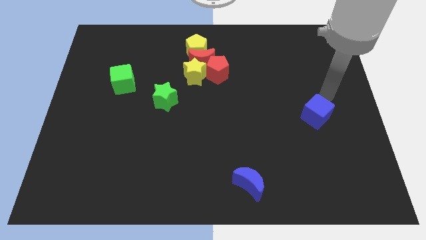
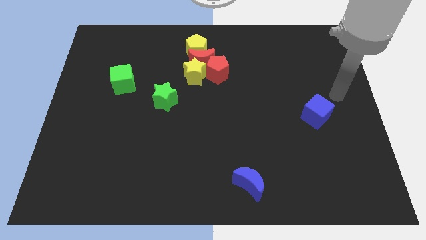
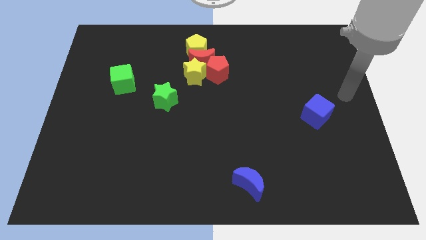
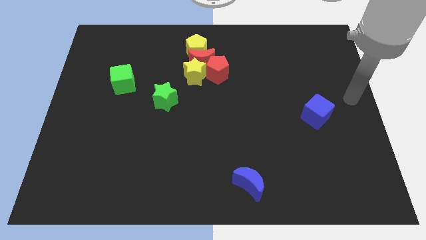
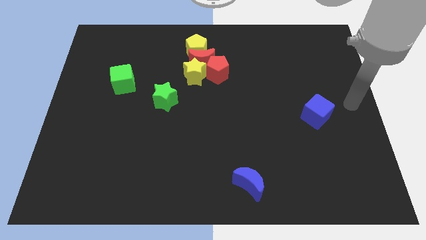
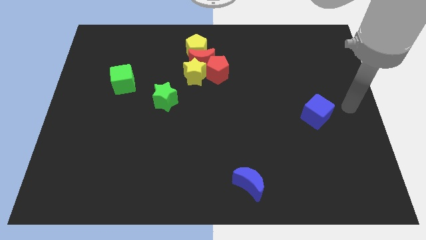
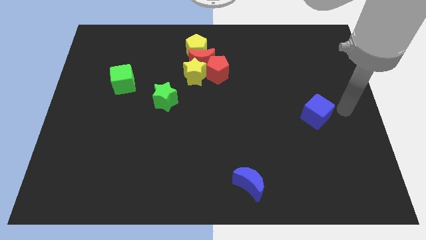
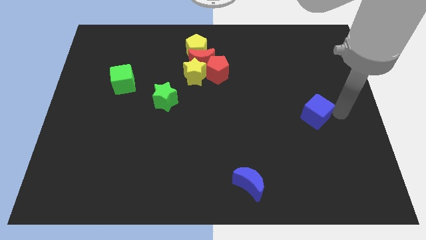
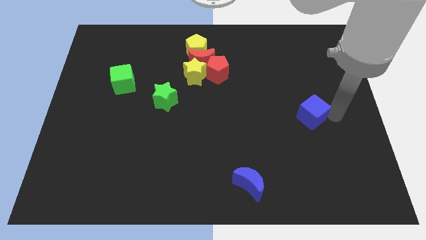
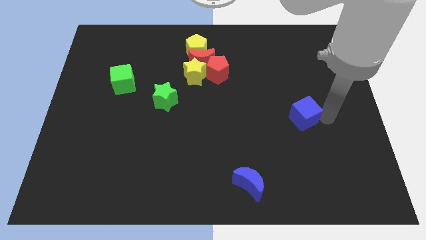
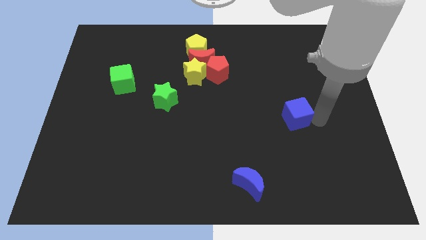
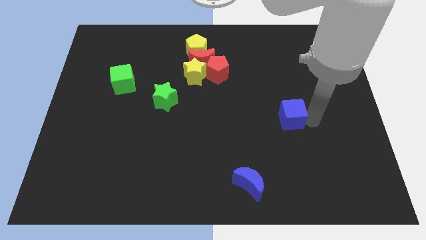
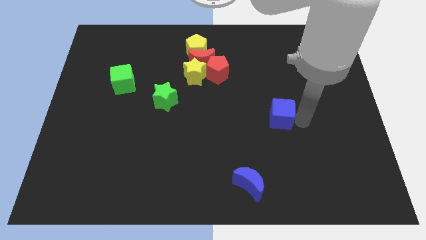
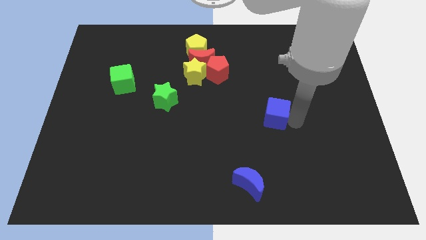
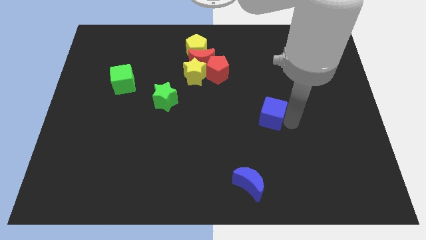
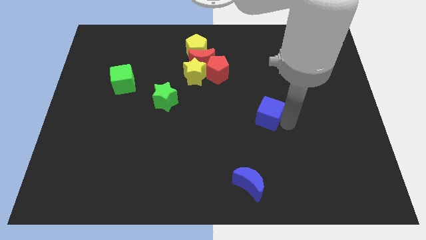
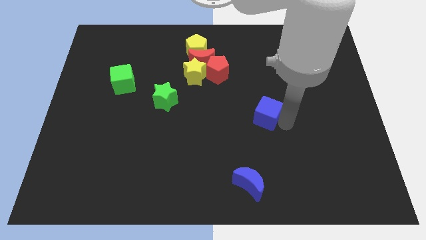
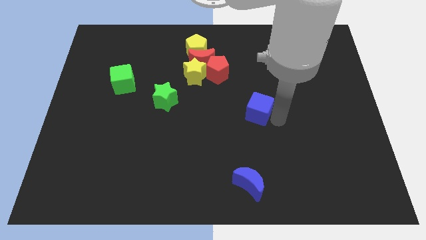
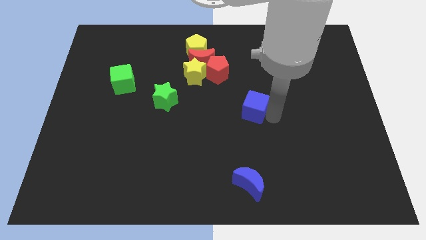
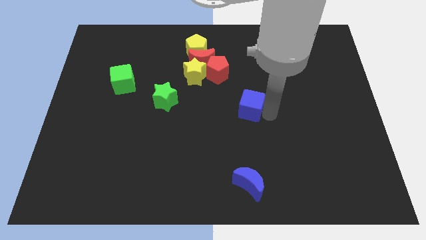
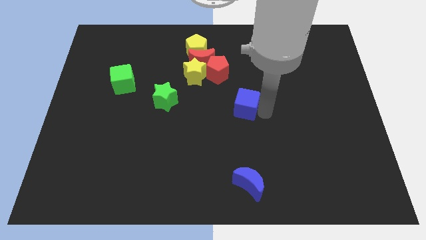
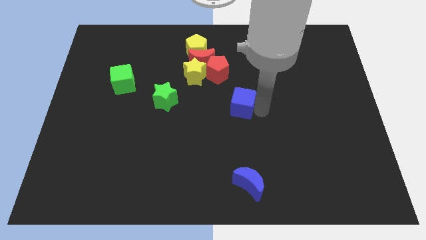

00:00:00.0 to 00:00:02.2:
move the blue cube vertically above the blue crescent

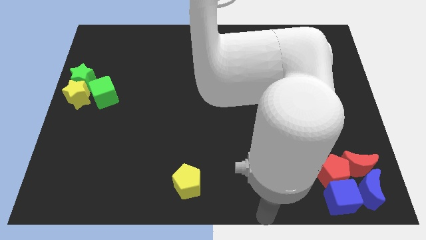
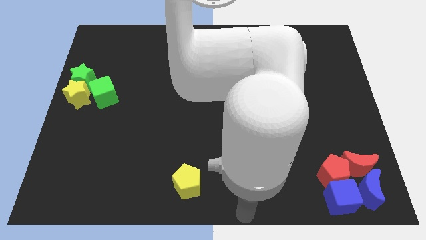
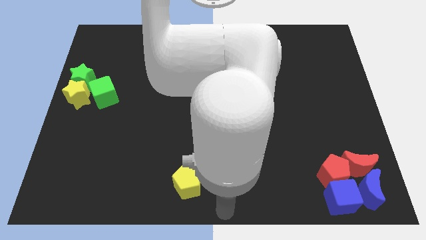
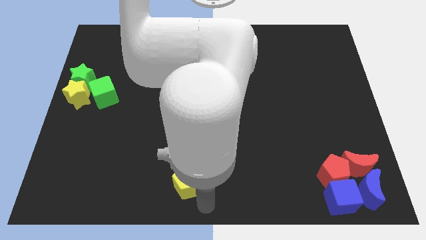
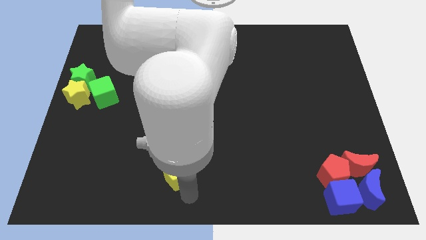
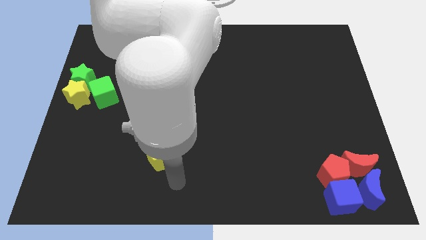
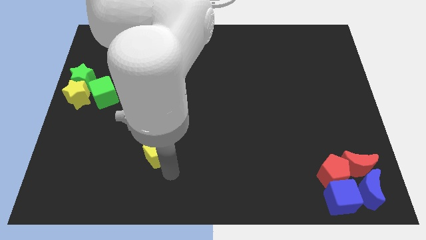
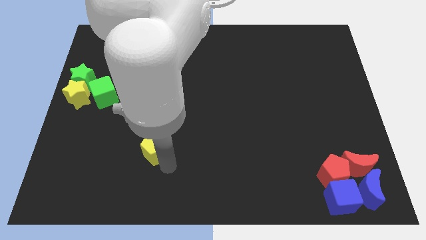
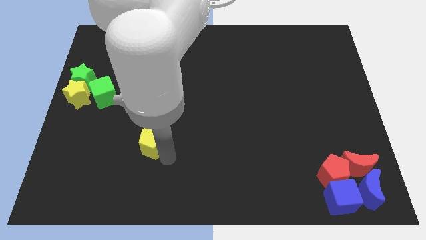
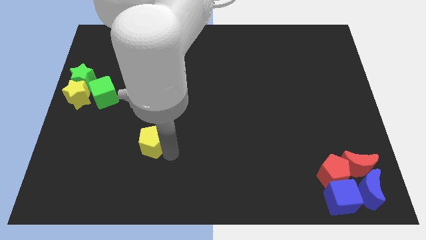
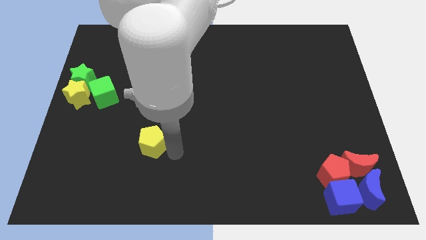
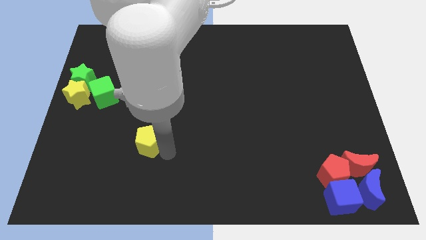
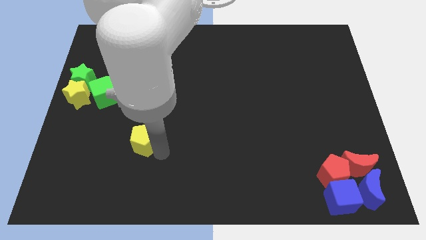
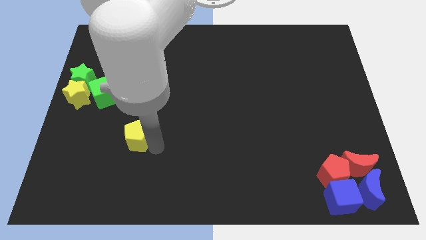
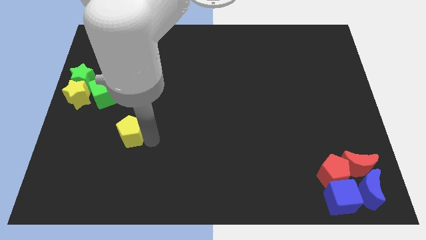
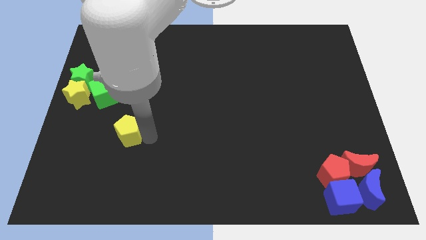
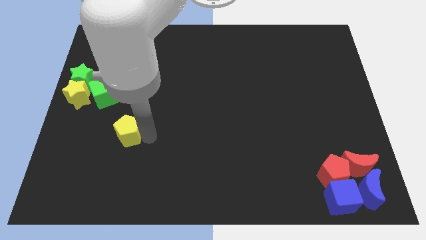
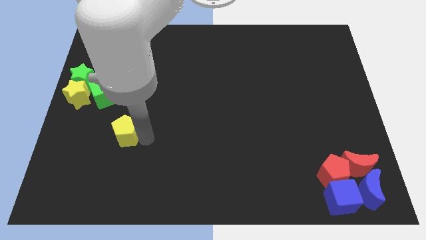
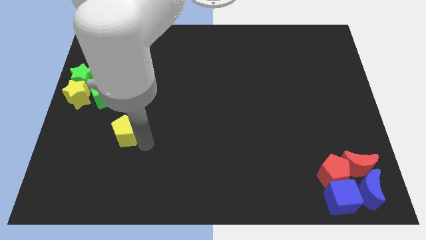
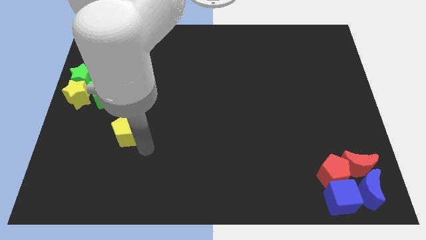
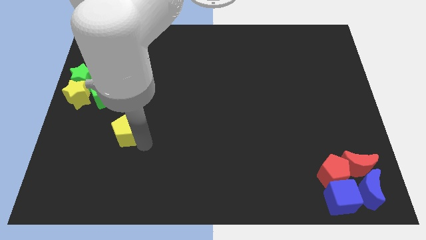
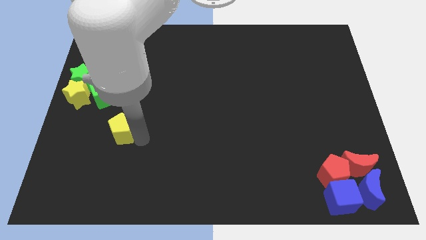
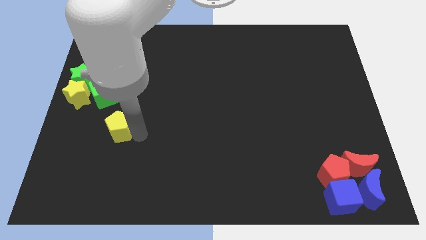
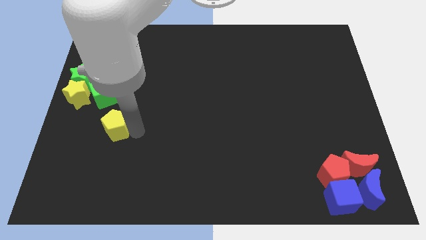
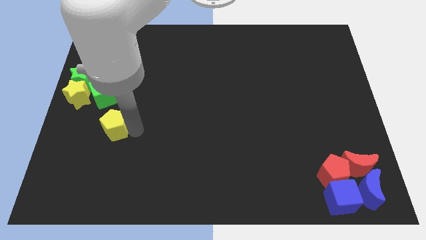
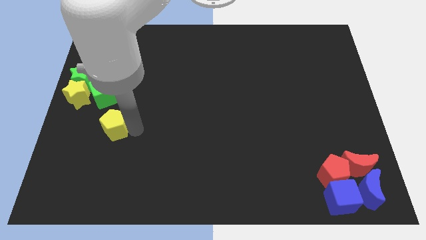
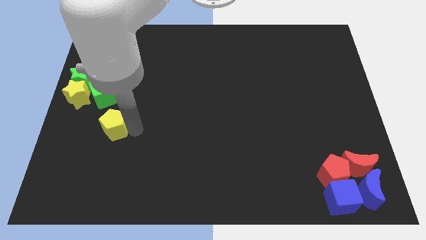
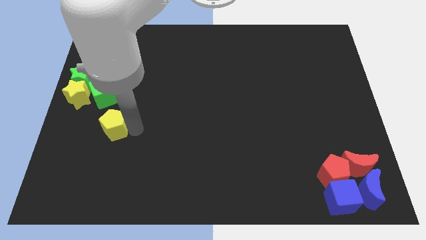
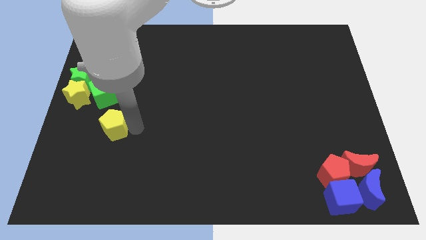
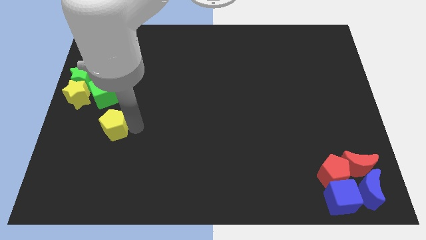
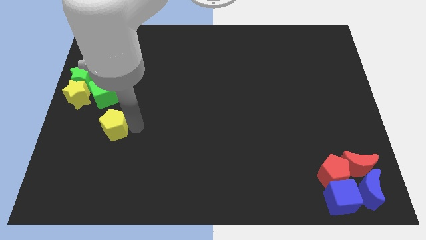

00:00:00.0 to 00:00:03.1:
push the yellow pentagon towards the group of blocks

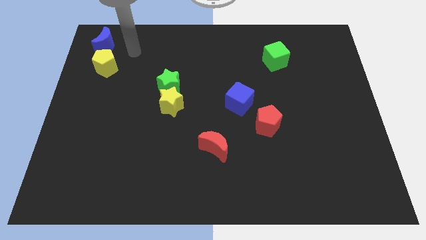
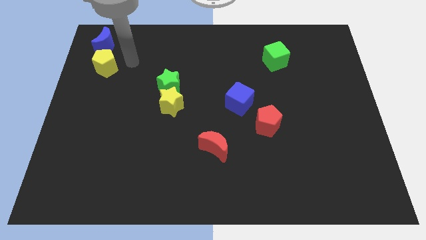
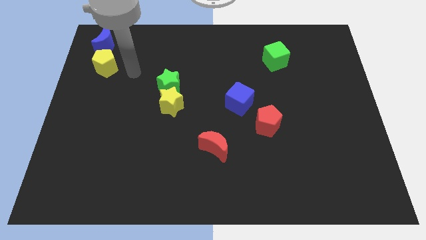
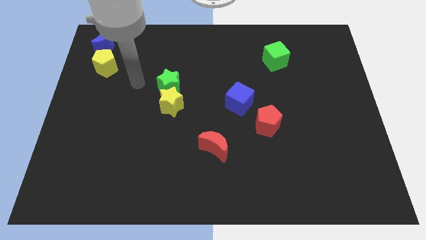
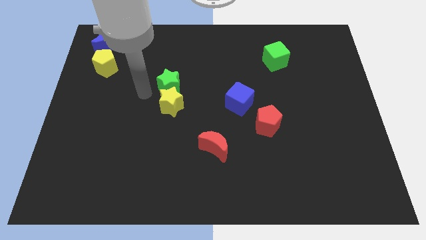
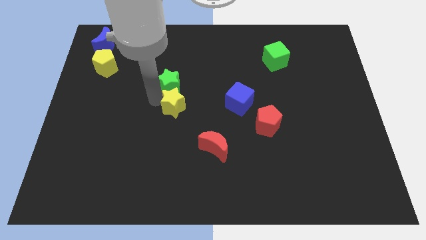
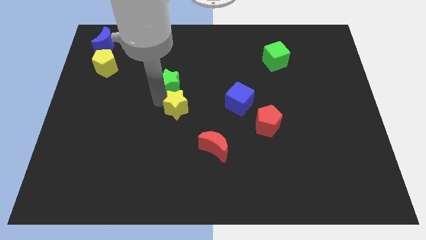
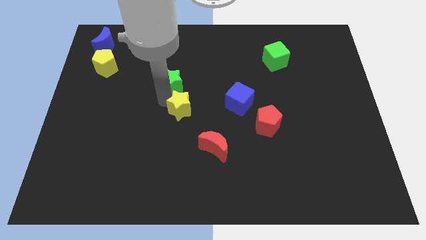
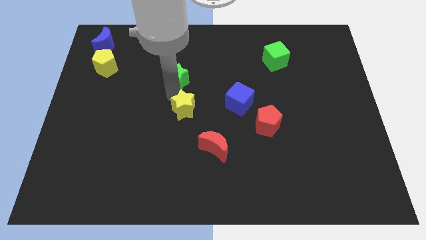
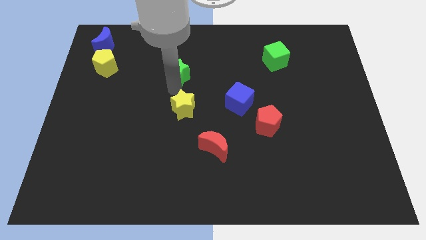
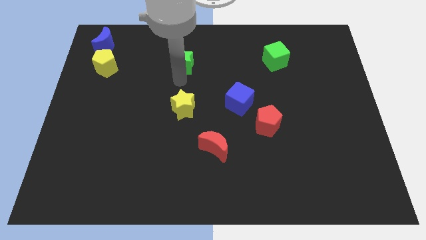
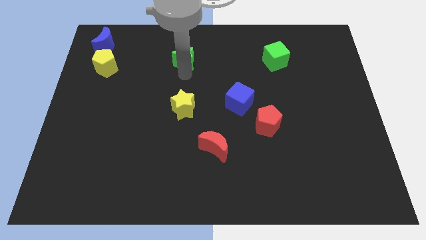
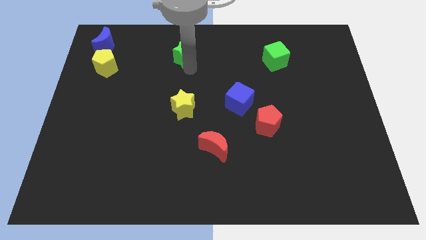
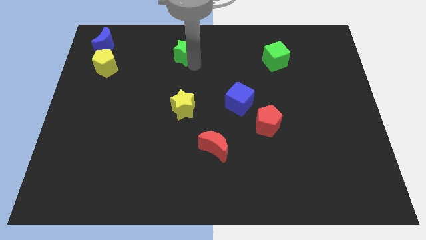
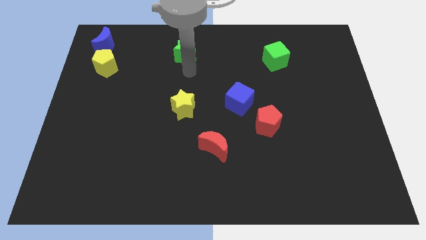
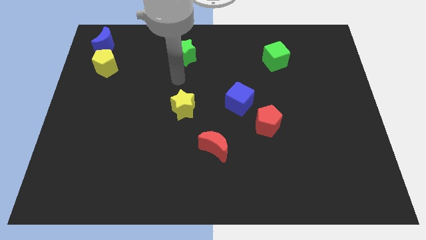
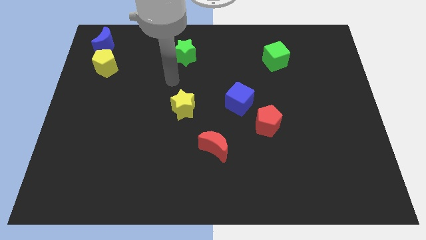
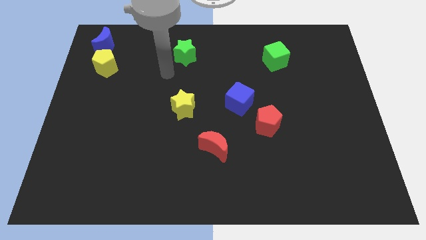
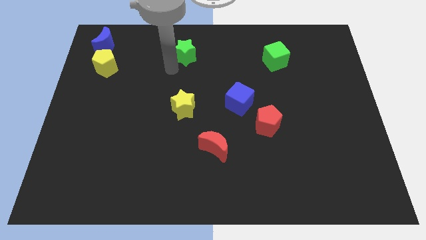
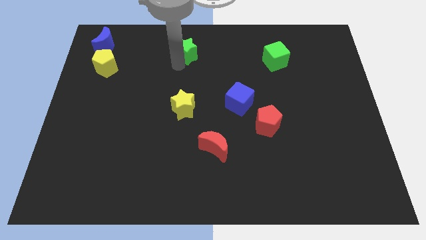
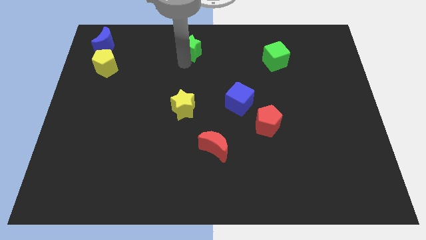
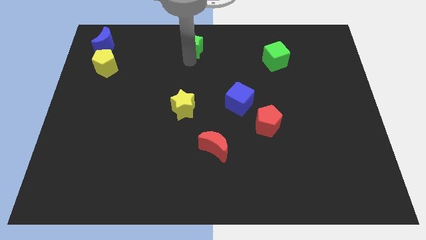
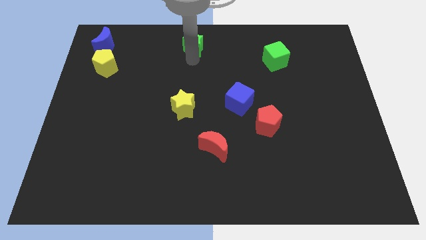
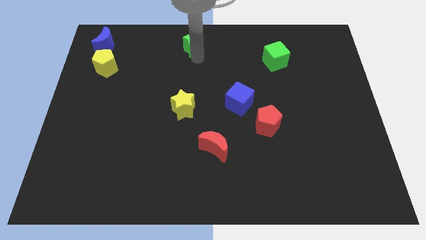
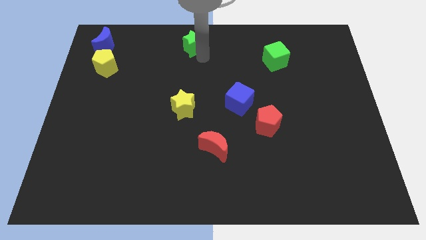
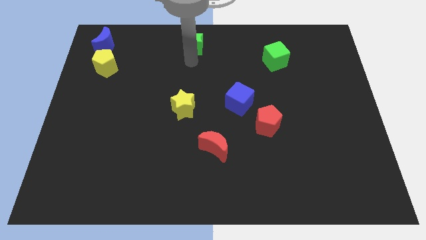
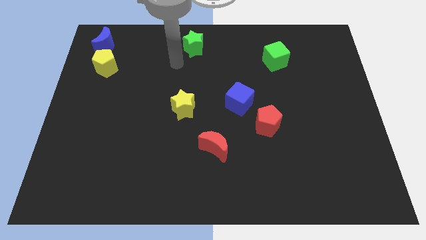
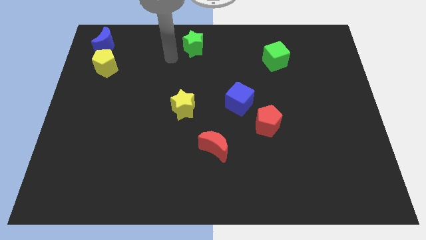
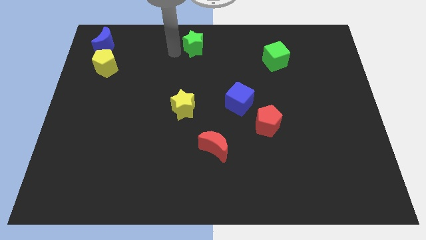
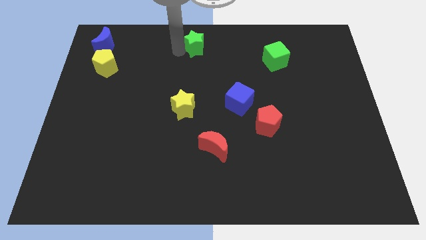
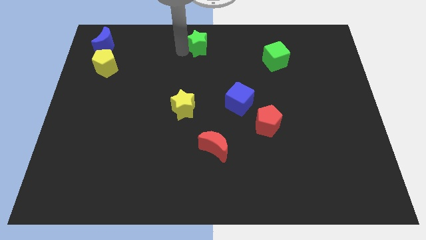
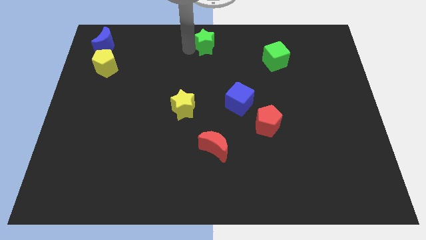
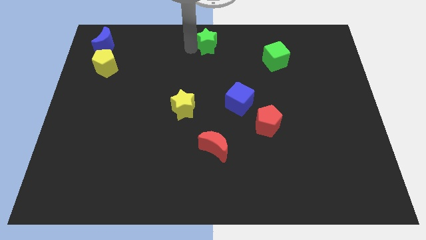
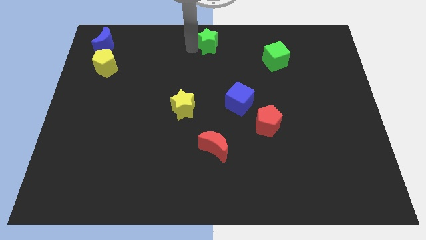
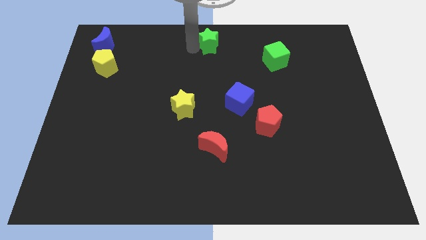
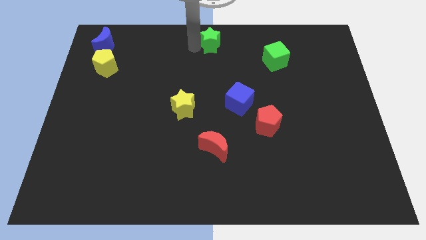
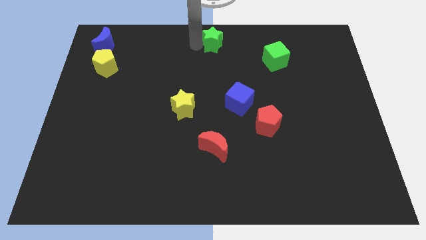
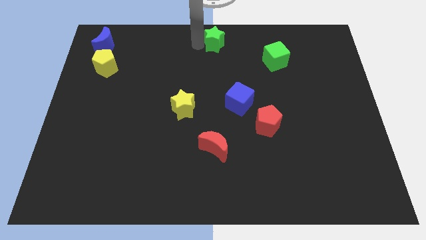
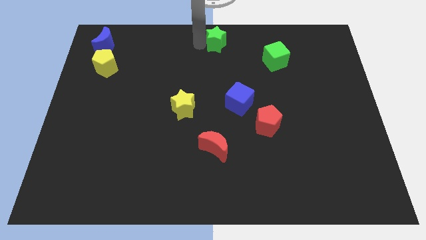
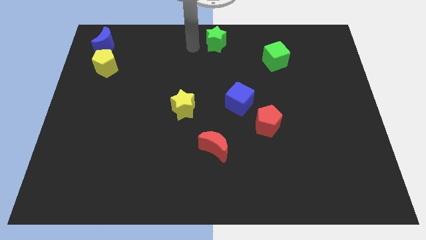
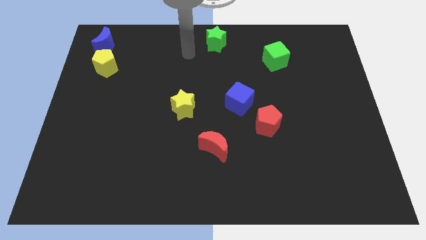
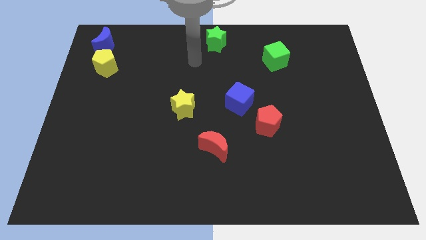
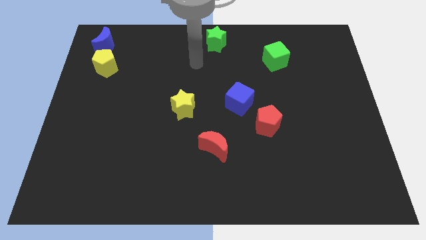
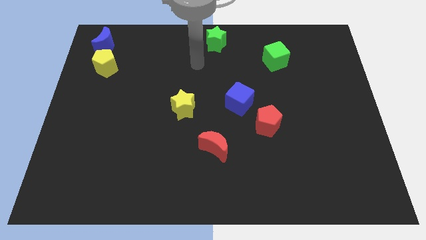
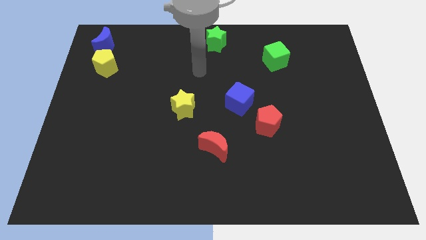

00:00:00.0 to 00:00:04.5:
place green star to the top center of the board
